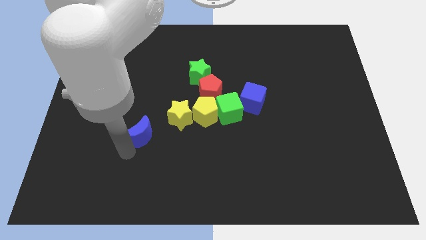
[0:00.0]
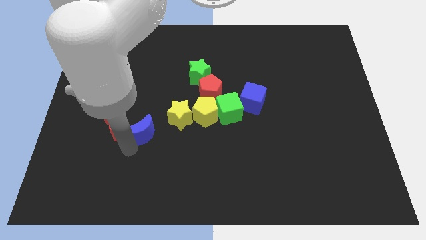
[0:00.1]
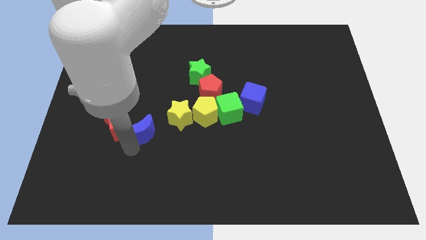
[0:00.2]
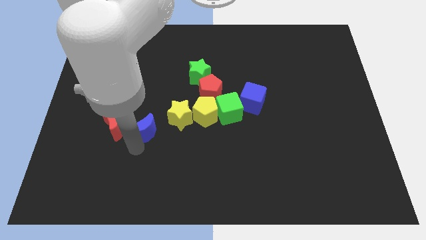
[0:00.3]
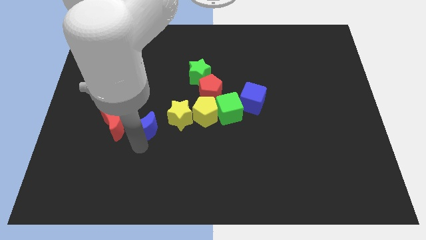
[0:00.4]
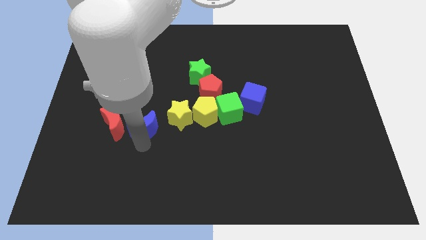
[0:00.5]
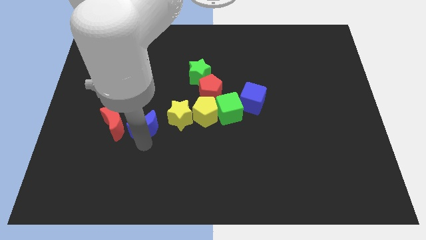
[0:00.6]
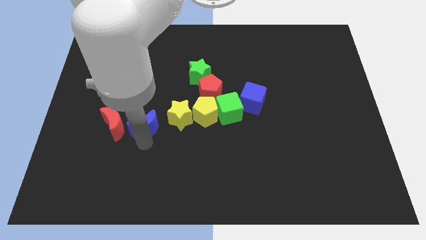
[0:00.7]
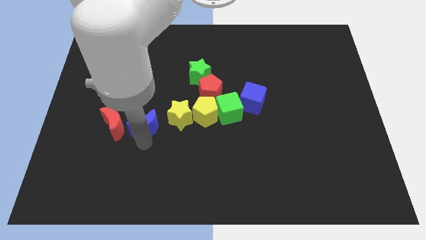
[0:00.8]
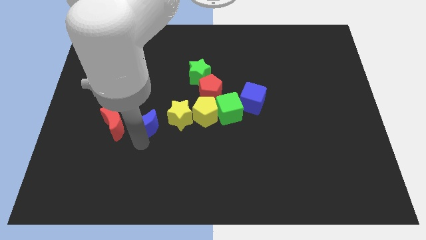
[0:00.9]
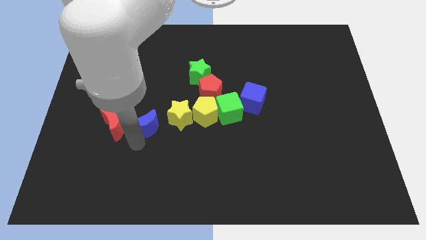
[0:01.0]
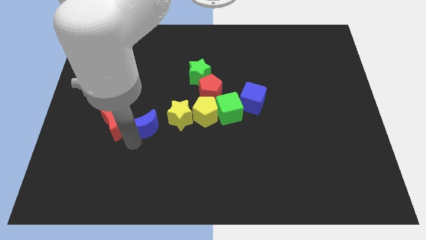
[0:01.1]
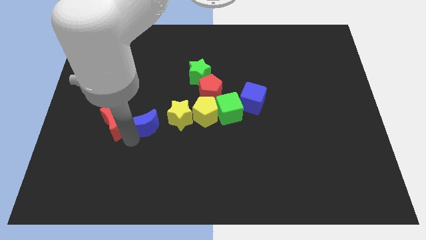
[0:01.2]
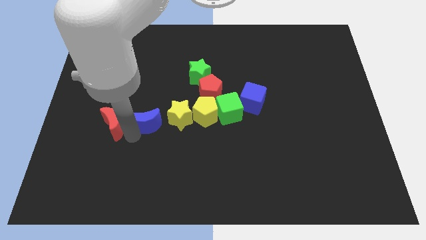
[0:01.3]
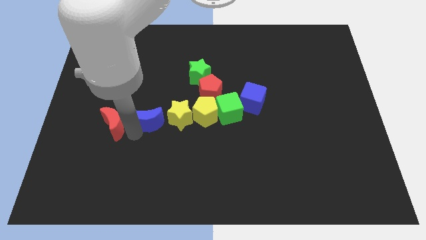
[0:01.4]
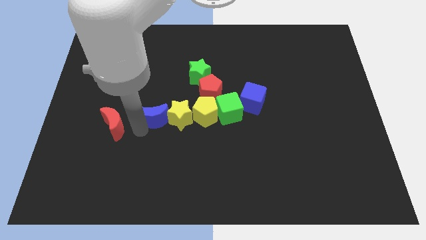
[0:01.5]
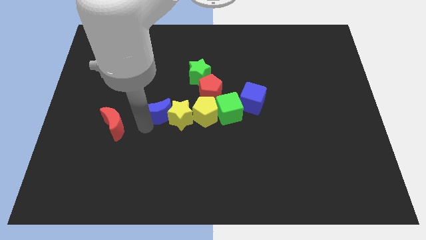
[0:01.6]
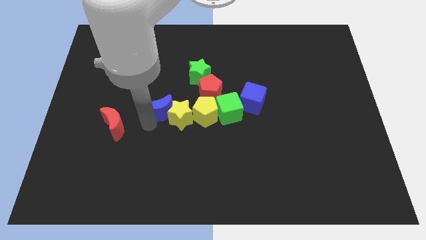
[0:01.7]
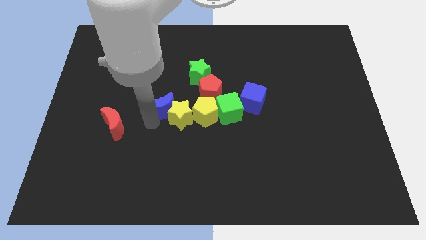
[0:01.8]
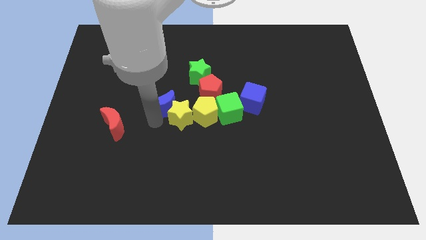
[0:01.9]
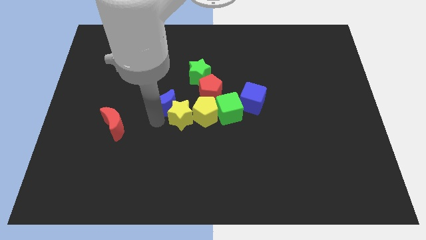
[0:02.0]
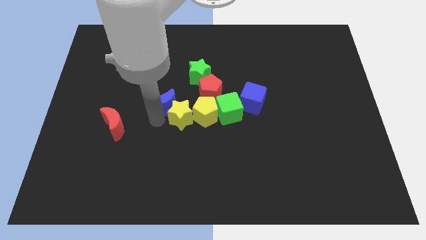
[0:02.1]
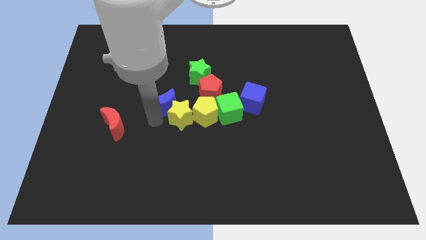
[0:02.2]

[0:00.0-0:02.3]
push the blue crescent on the left top of the yellow star

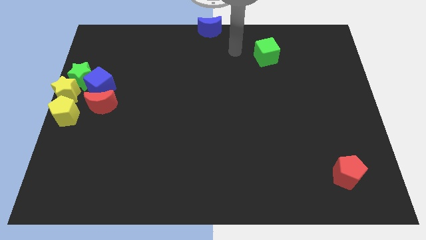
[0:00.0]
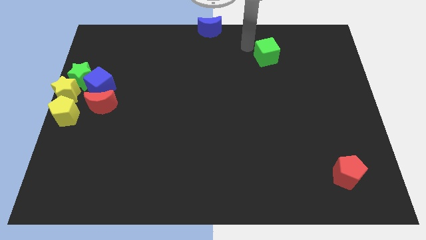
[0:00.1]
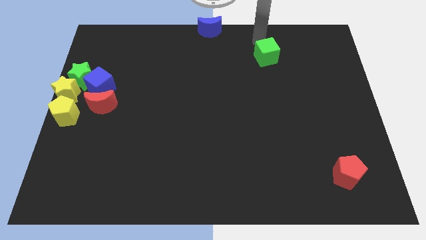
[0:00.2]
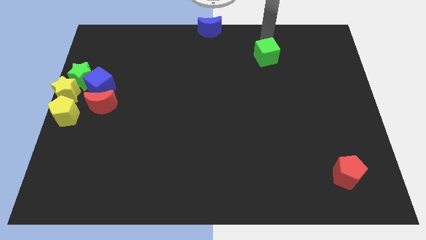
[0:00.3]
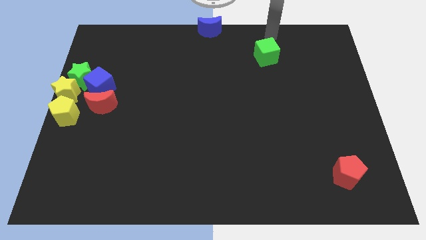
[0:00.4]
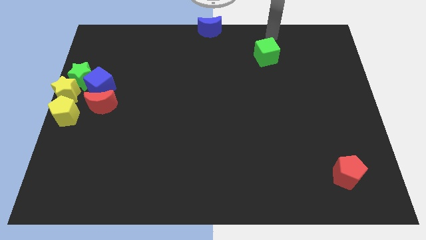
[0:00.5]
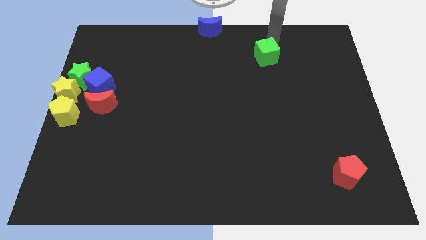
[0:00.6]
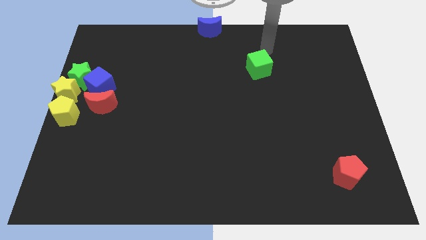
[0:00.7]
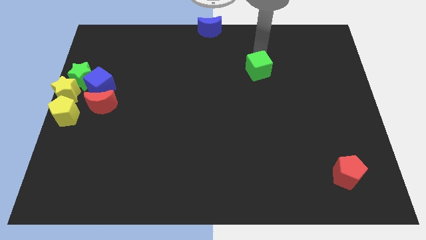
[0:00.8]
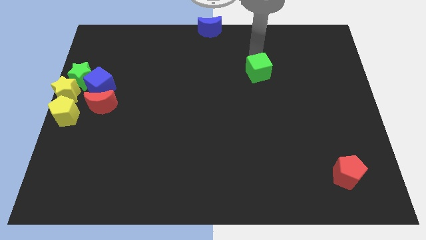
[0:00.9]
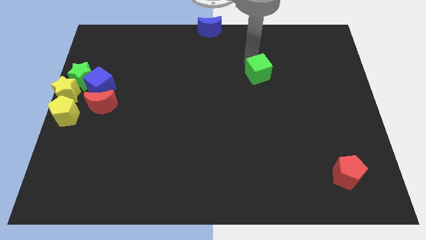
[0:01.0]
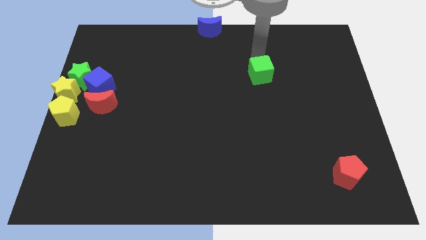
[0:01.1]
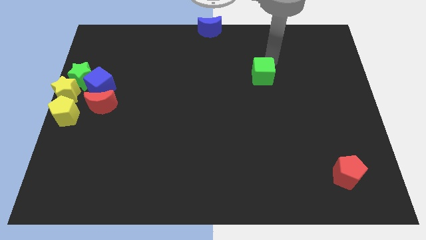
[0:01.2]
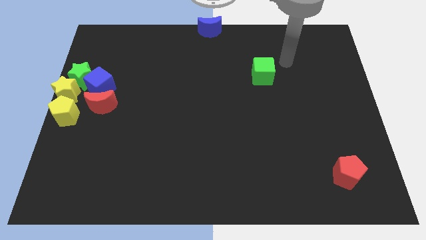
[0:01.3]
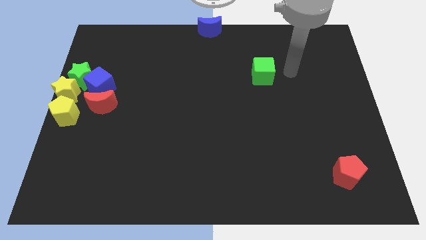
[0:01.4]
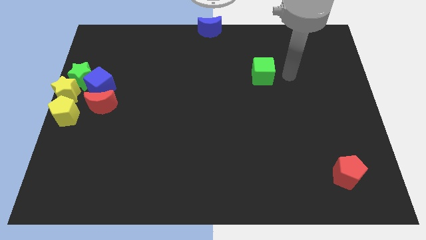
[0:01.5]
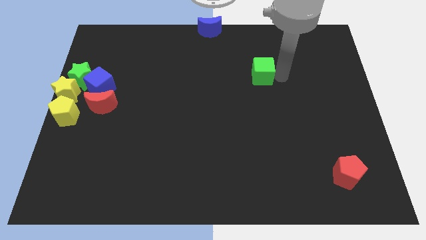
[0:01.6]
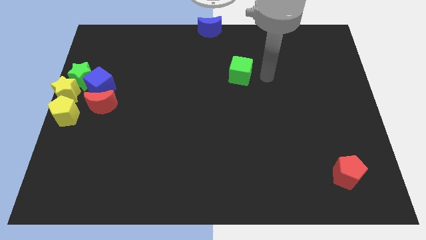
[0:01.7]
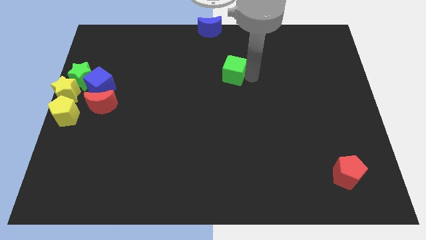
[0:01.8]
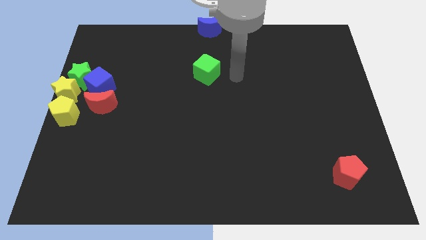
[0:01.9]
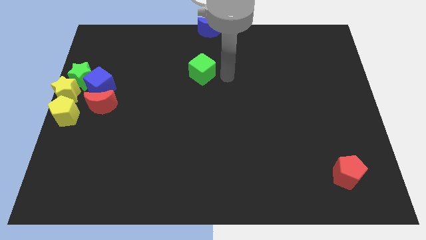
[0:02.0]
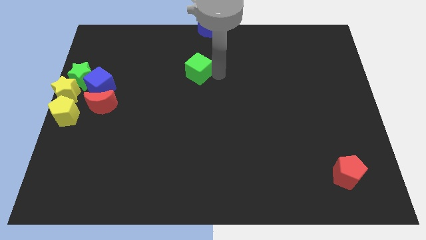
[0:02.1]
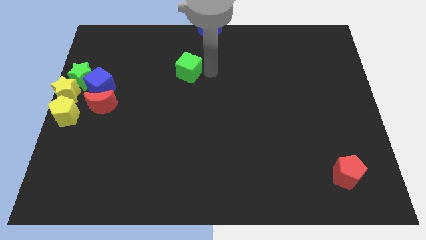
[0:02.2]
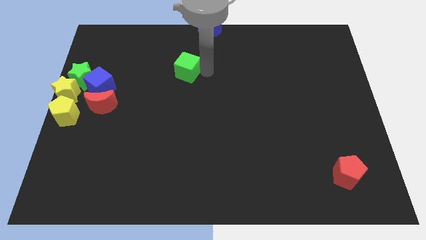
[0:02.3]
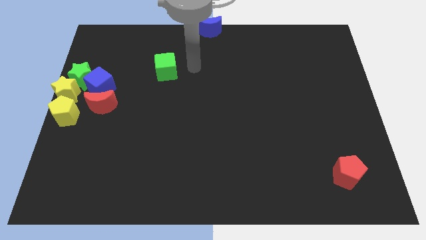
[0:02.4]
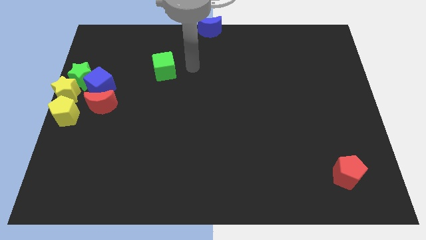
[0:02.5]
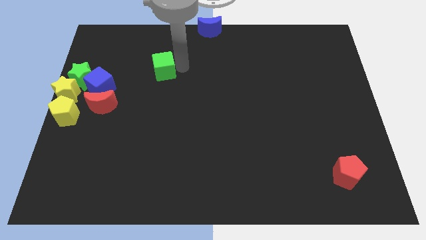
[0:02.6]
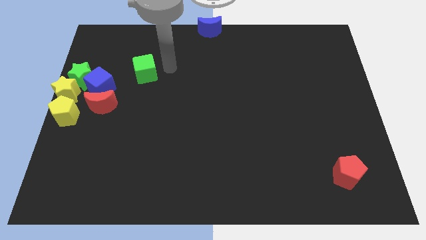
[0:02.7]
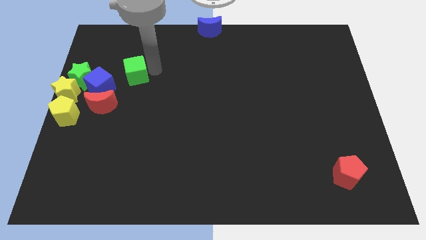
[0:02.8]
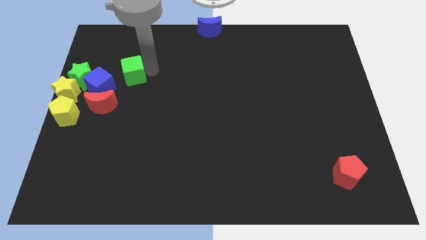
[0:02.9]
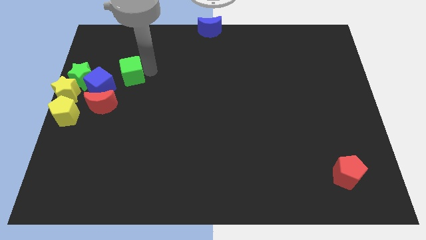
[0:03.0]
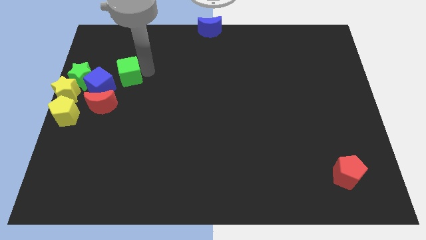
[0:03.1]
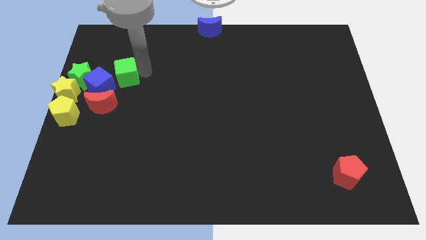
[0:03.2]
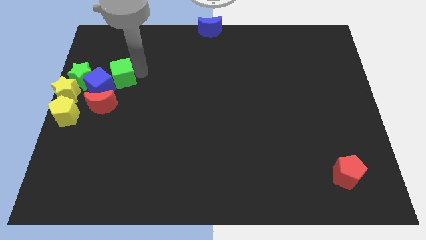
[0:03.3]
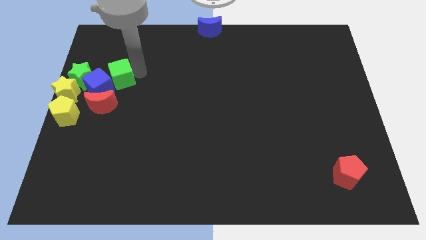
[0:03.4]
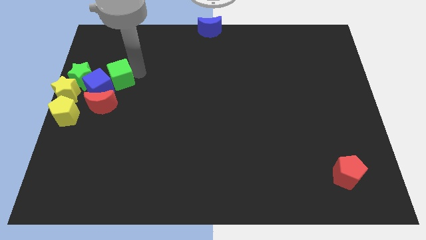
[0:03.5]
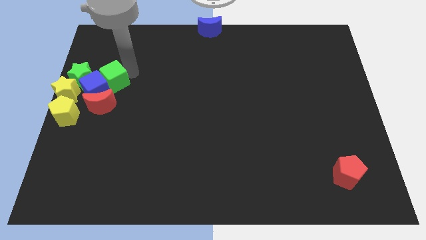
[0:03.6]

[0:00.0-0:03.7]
push the green cube into the blue cube

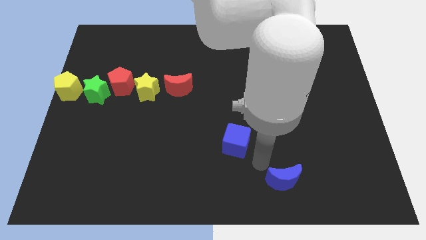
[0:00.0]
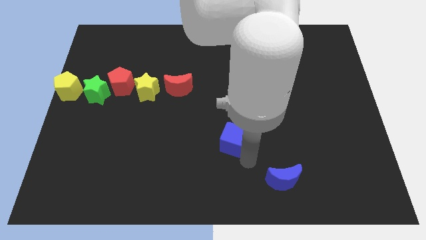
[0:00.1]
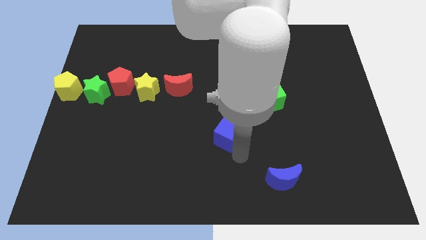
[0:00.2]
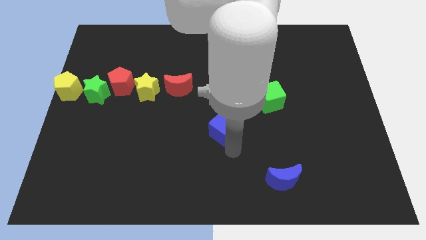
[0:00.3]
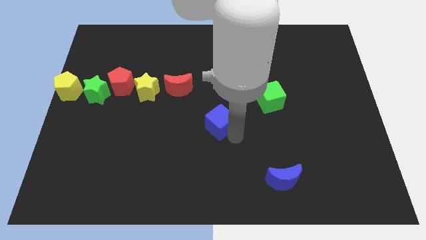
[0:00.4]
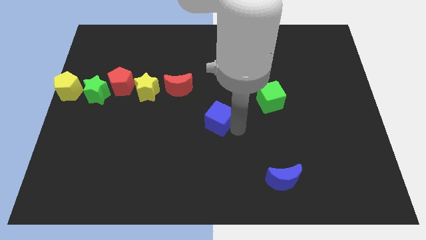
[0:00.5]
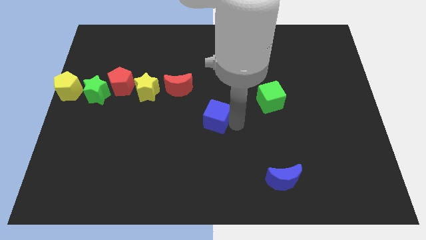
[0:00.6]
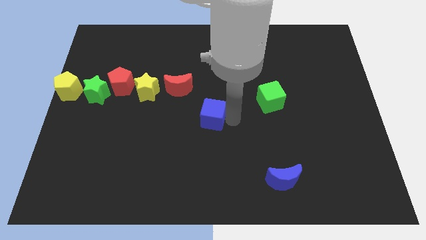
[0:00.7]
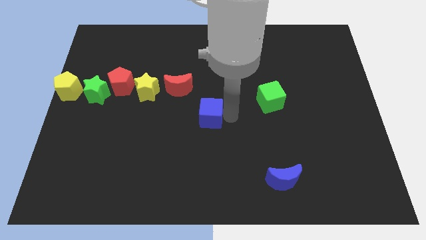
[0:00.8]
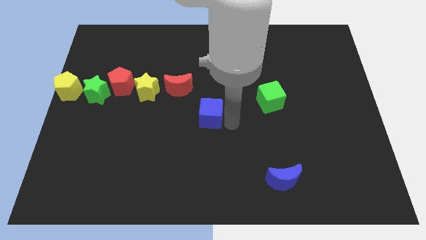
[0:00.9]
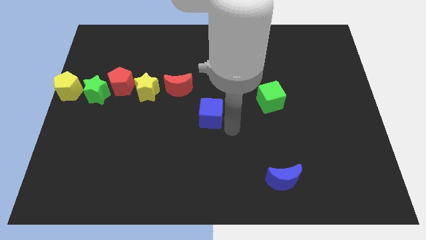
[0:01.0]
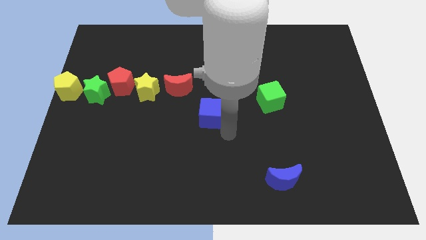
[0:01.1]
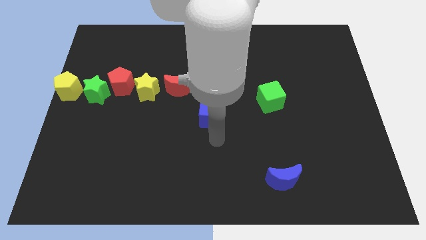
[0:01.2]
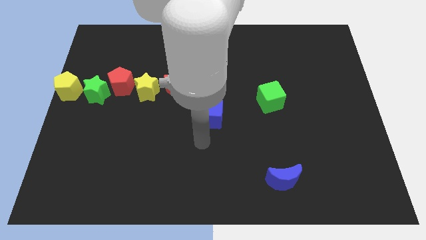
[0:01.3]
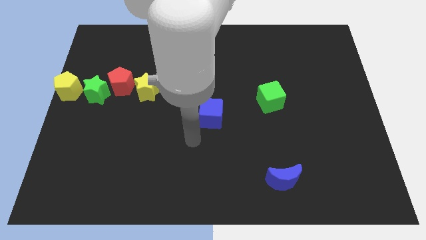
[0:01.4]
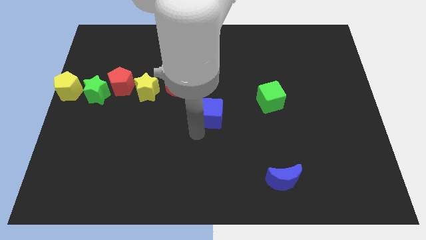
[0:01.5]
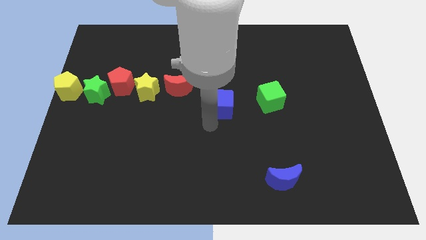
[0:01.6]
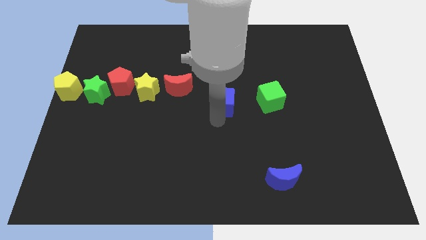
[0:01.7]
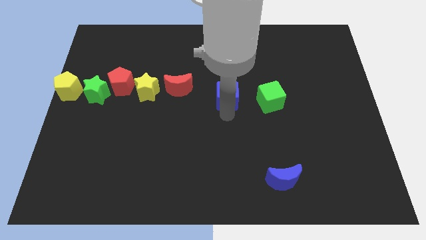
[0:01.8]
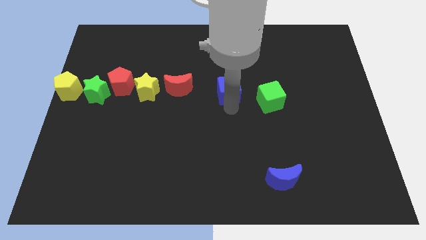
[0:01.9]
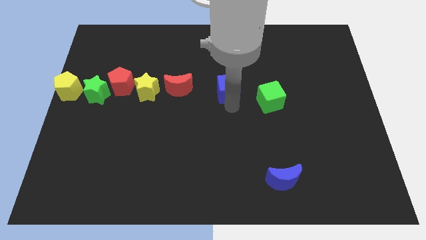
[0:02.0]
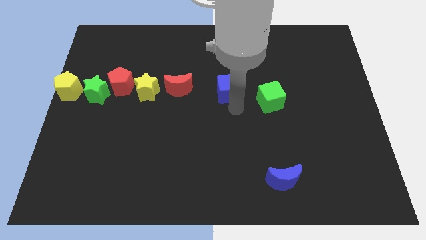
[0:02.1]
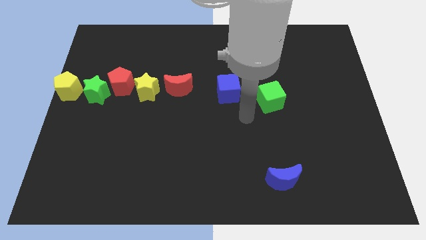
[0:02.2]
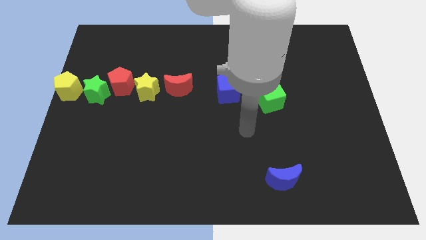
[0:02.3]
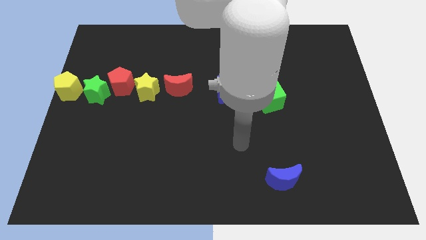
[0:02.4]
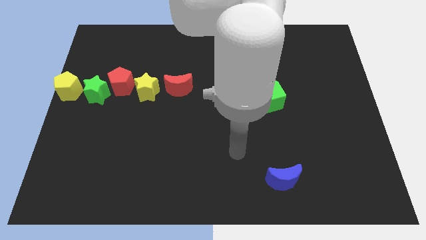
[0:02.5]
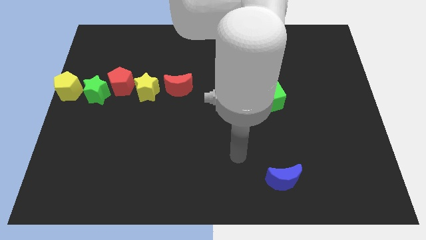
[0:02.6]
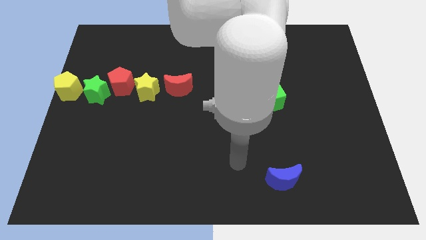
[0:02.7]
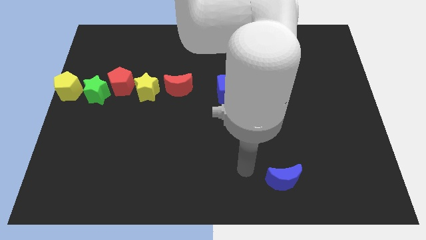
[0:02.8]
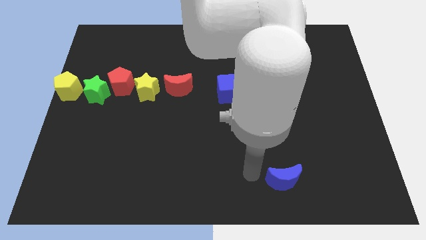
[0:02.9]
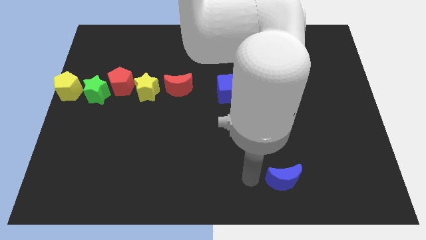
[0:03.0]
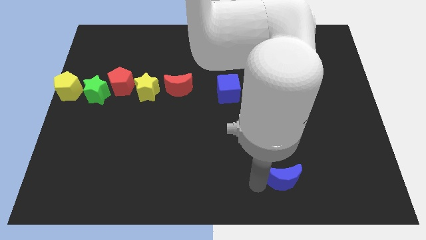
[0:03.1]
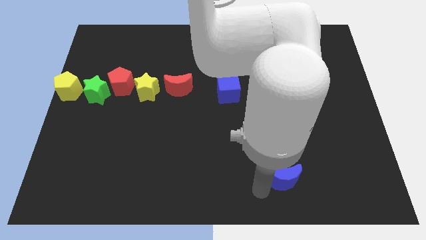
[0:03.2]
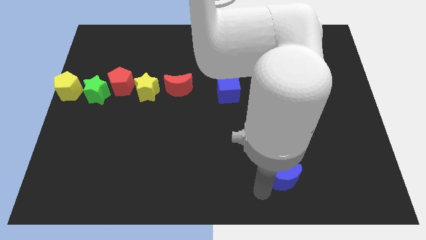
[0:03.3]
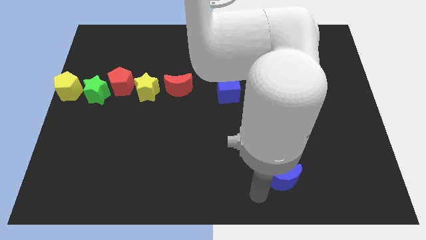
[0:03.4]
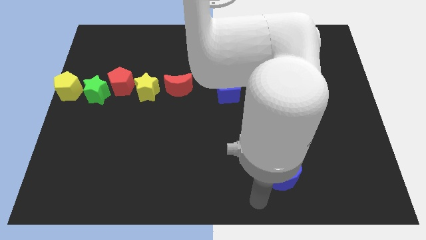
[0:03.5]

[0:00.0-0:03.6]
push the blue cube to the right of the red moon
